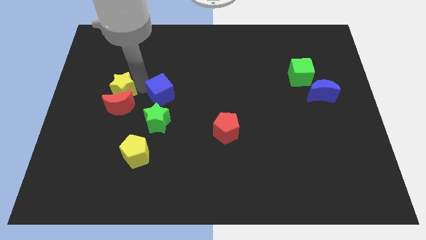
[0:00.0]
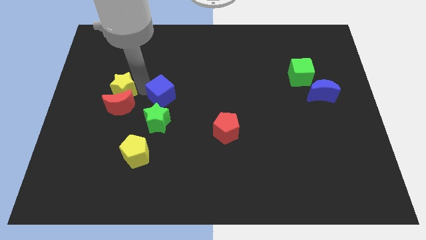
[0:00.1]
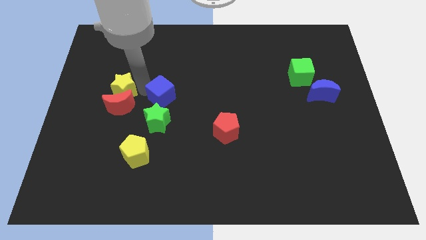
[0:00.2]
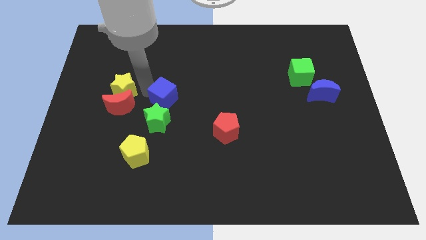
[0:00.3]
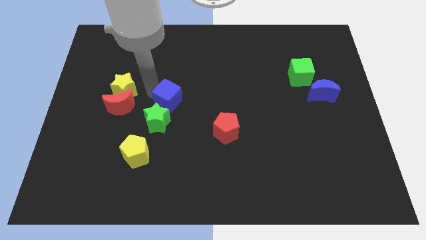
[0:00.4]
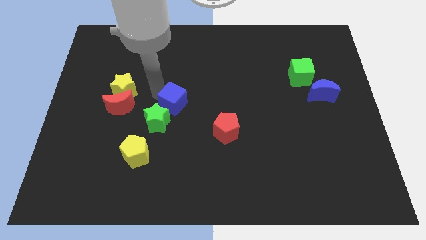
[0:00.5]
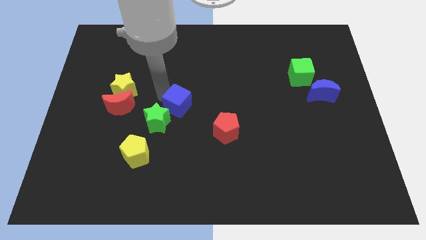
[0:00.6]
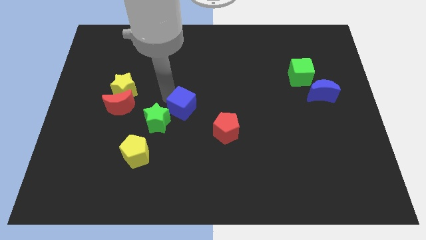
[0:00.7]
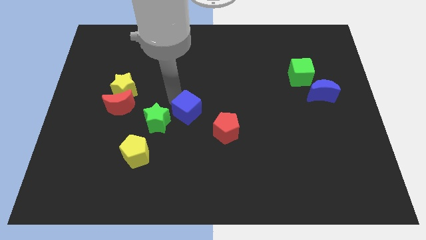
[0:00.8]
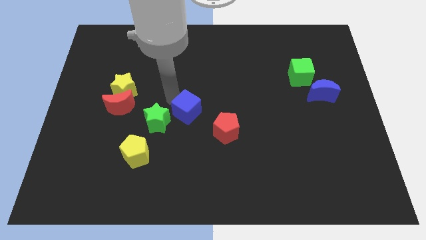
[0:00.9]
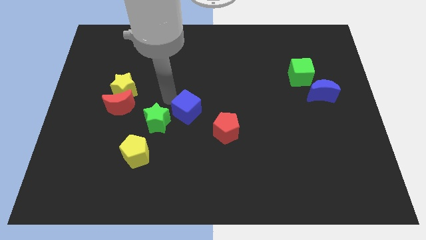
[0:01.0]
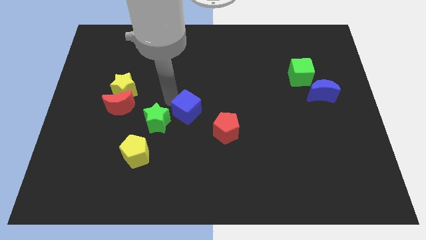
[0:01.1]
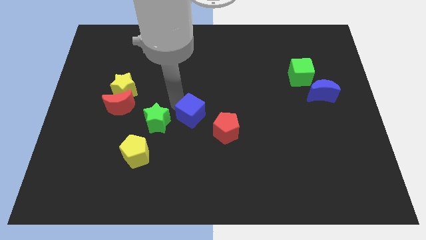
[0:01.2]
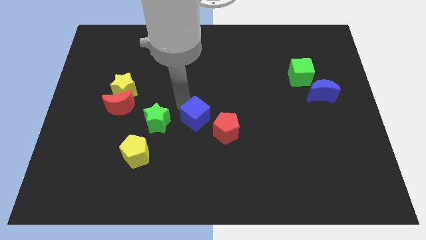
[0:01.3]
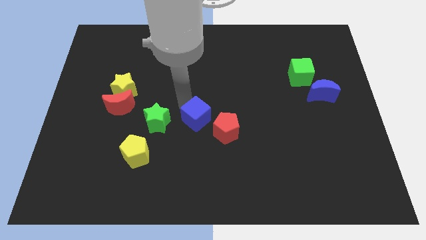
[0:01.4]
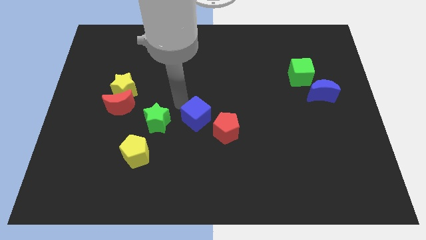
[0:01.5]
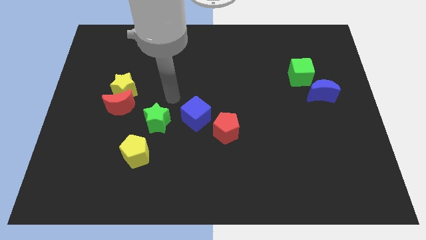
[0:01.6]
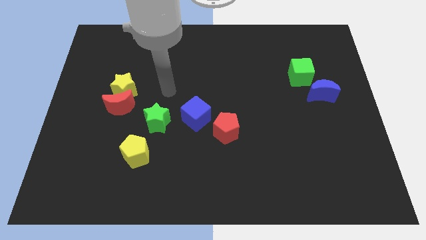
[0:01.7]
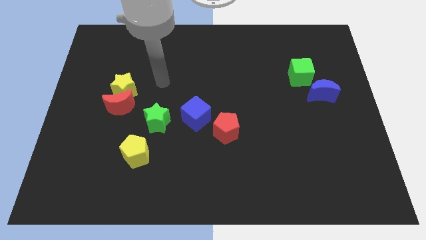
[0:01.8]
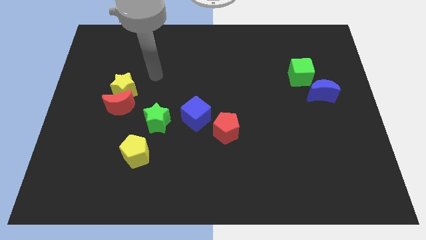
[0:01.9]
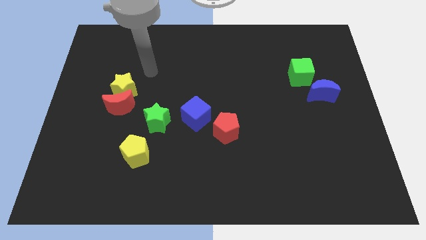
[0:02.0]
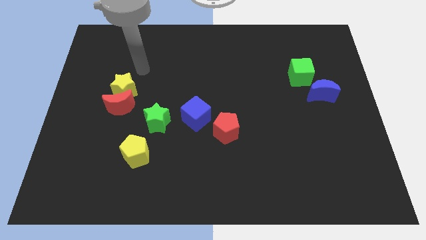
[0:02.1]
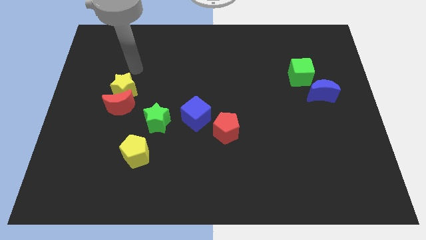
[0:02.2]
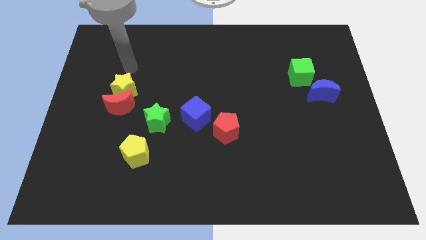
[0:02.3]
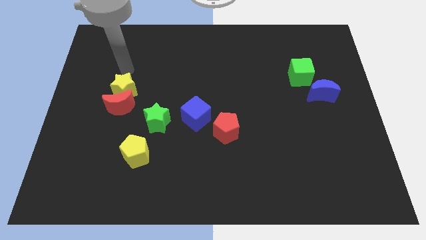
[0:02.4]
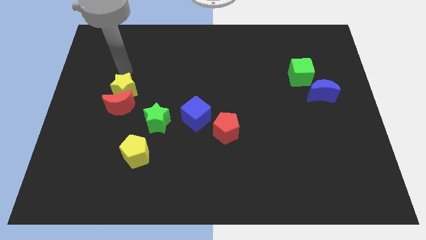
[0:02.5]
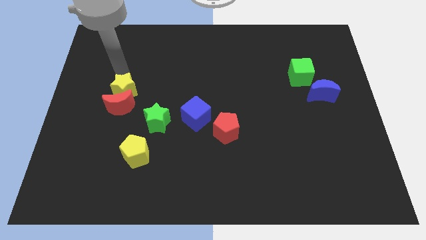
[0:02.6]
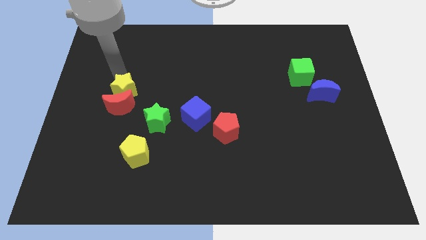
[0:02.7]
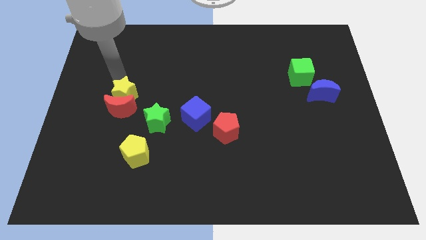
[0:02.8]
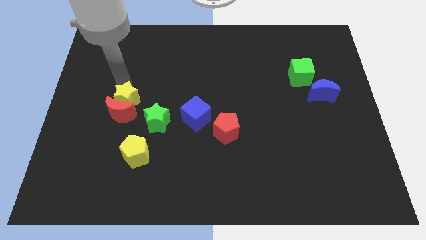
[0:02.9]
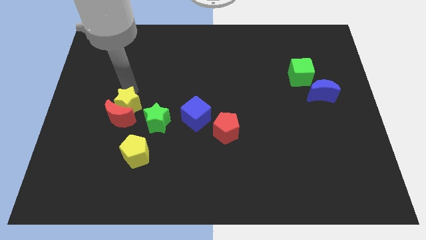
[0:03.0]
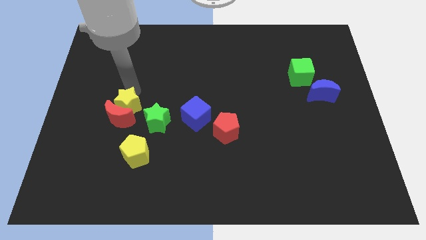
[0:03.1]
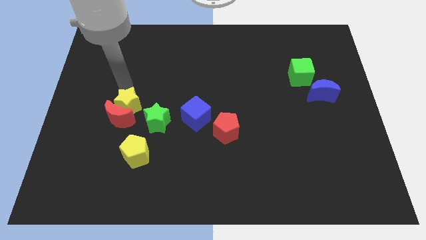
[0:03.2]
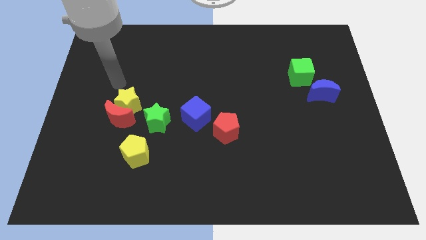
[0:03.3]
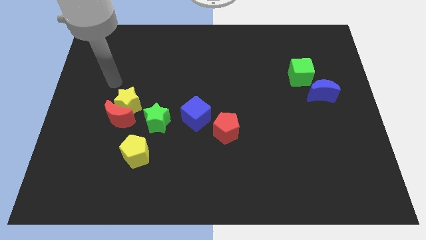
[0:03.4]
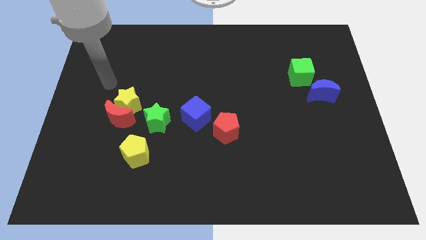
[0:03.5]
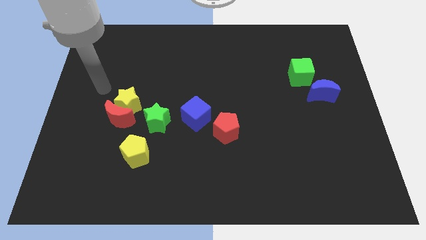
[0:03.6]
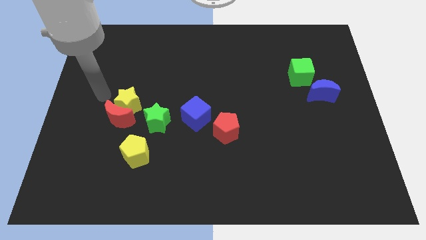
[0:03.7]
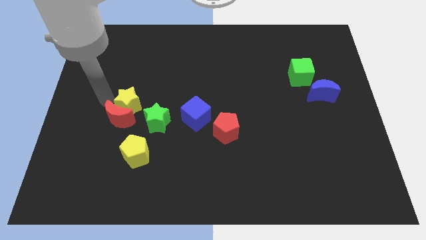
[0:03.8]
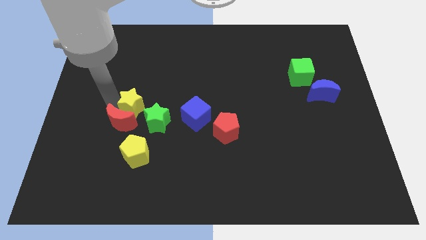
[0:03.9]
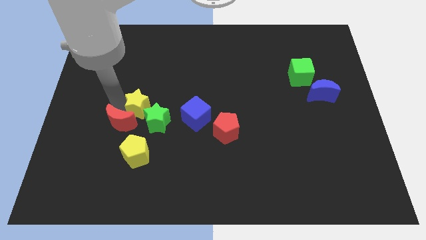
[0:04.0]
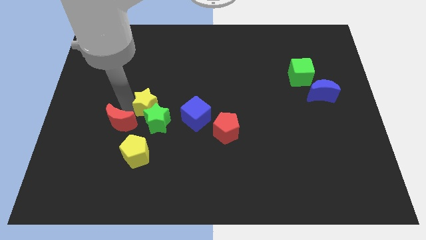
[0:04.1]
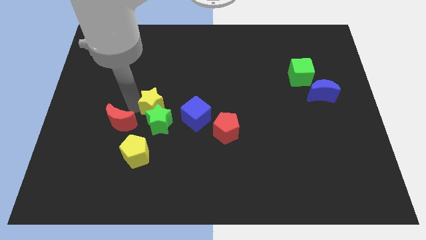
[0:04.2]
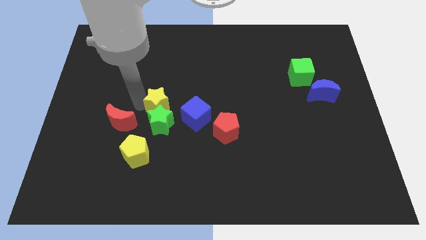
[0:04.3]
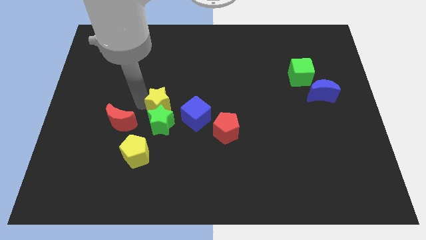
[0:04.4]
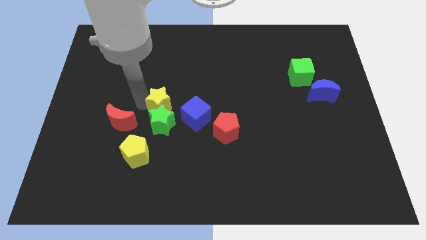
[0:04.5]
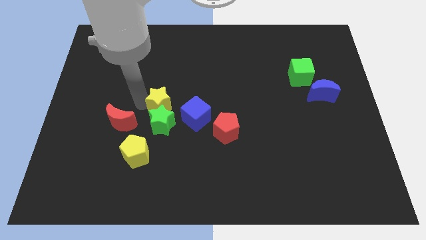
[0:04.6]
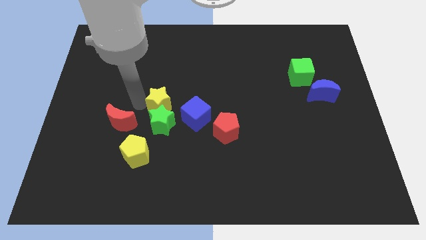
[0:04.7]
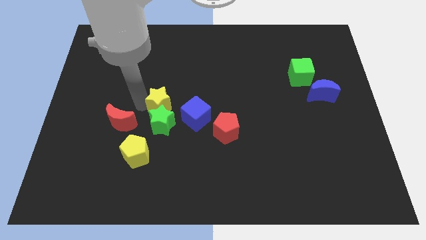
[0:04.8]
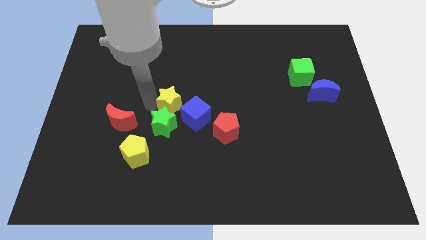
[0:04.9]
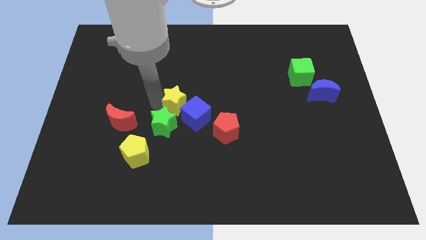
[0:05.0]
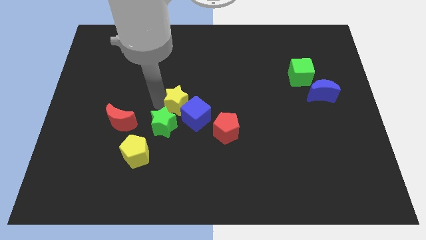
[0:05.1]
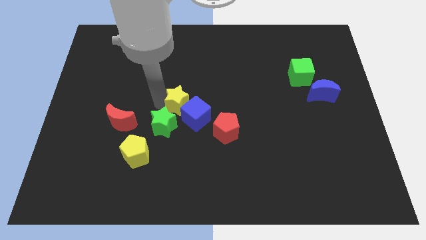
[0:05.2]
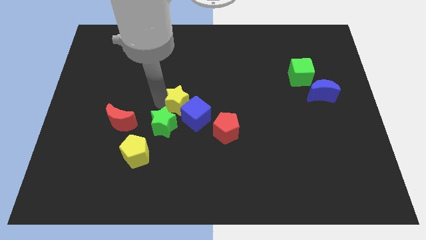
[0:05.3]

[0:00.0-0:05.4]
place the blue cube and the yellow star at the center of the board

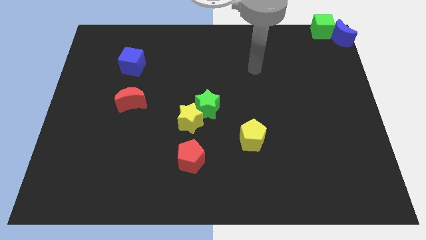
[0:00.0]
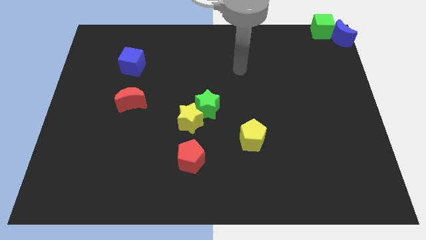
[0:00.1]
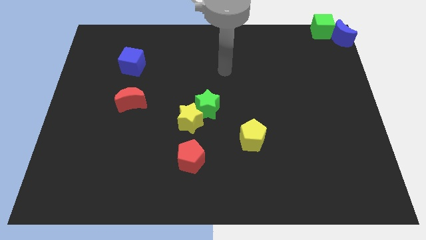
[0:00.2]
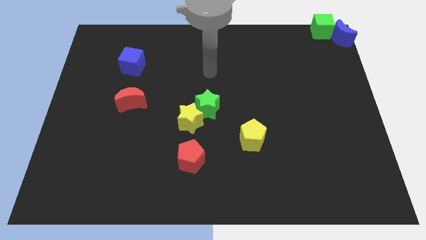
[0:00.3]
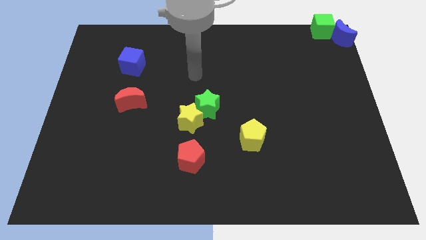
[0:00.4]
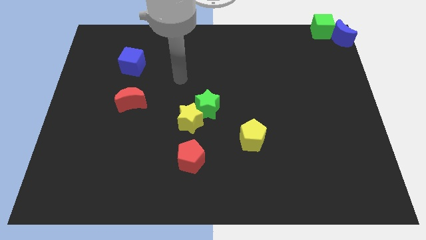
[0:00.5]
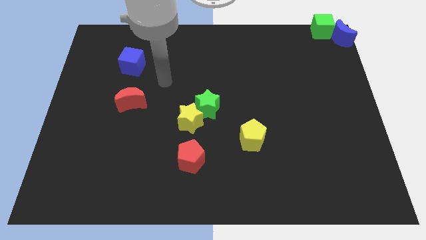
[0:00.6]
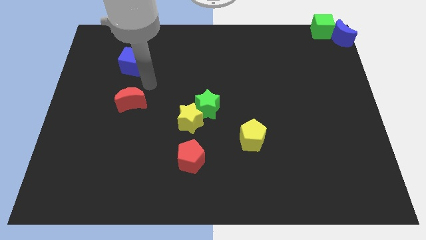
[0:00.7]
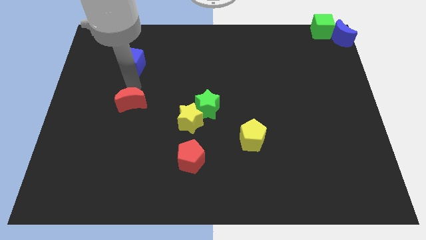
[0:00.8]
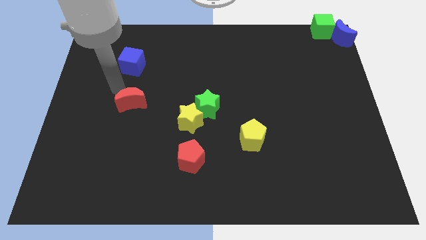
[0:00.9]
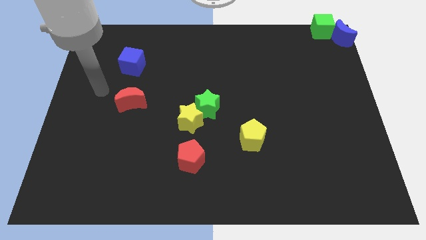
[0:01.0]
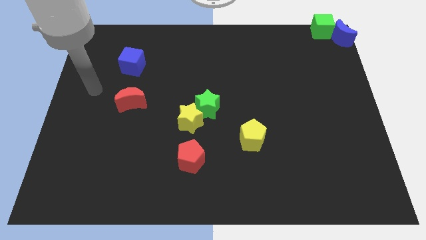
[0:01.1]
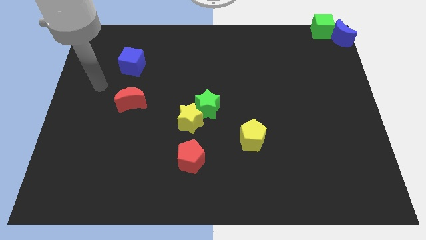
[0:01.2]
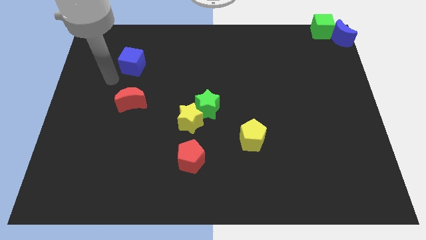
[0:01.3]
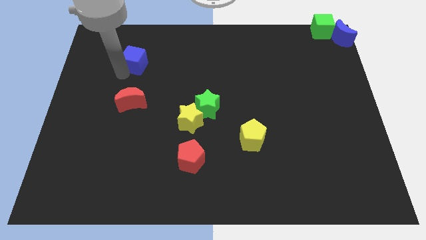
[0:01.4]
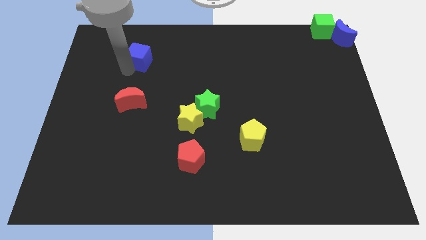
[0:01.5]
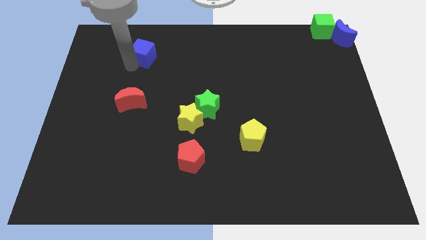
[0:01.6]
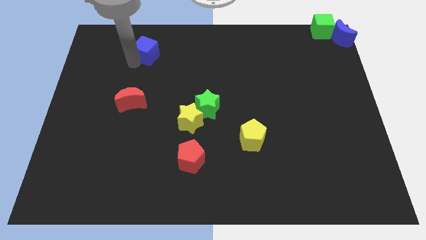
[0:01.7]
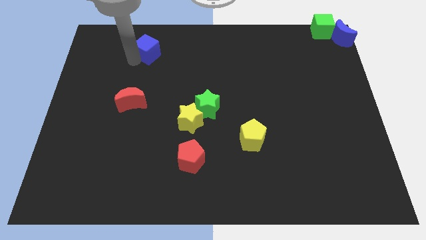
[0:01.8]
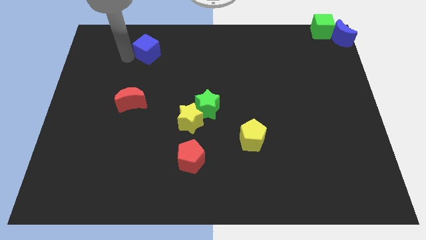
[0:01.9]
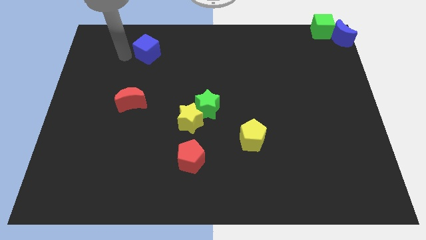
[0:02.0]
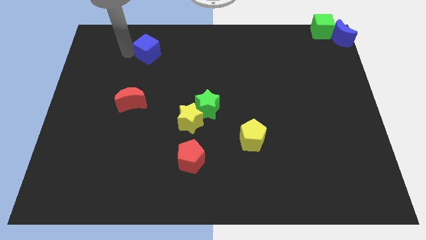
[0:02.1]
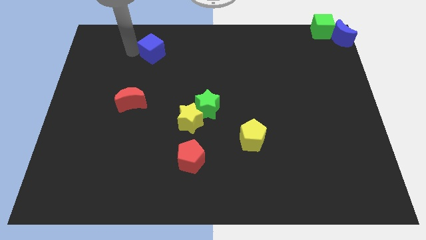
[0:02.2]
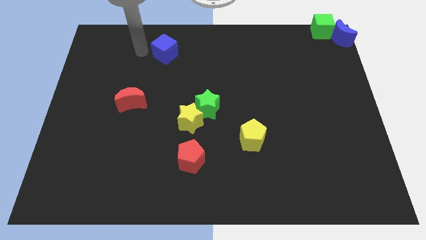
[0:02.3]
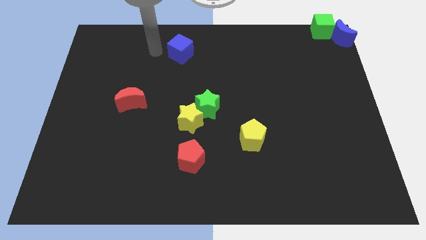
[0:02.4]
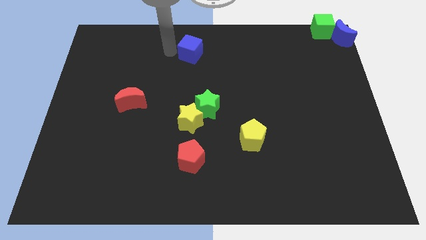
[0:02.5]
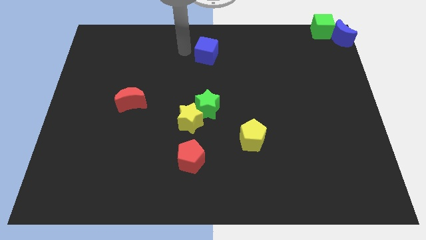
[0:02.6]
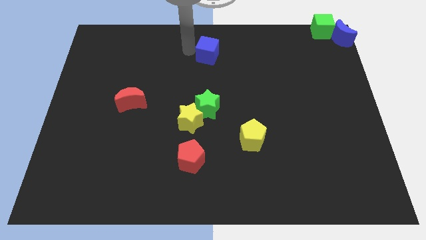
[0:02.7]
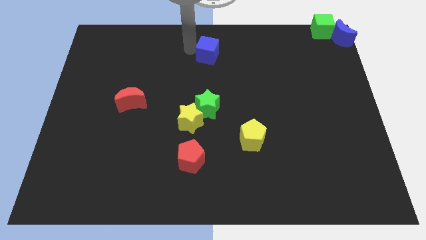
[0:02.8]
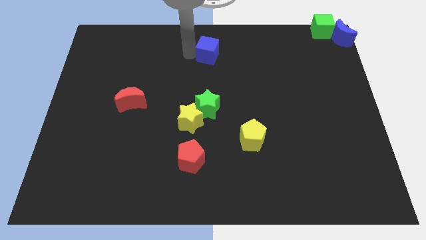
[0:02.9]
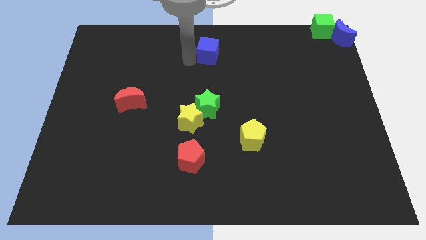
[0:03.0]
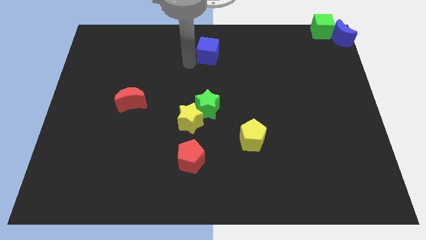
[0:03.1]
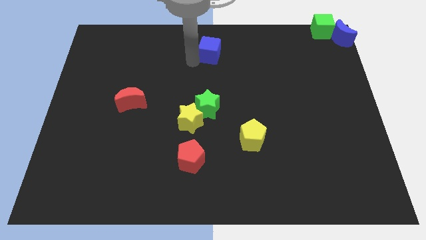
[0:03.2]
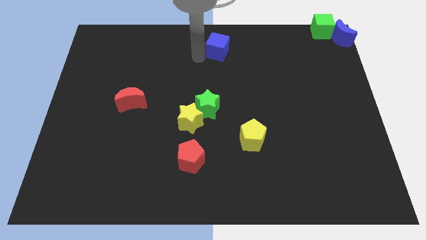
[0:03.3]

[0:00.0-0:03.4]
put the blue cube at the top center of the board

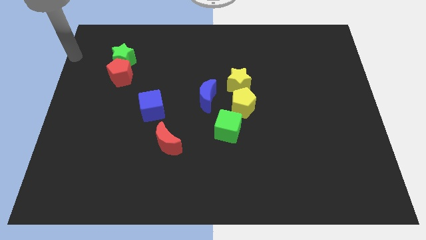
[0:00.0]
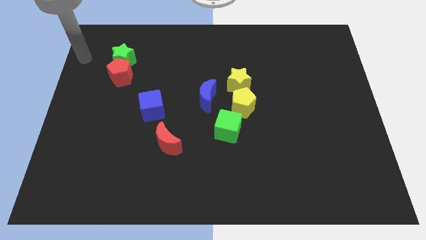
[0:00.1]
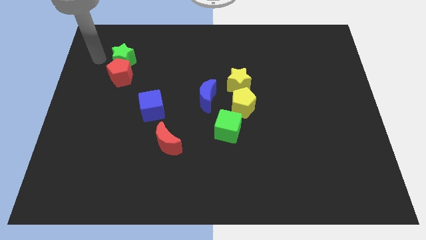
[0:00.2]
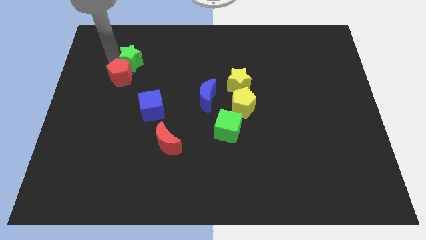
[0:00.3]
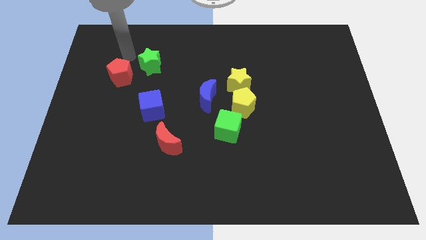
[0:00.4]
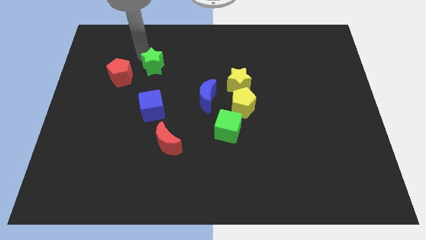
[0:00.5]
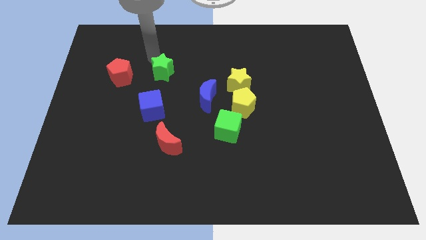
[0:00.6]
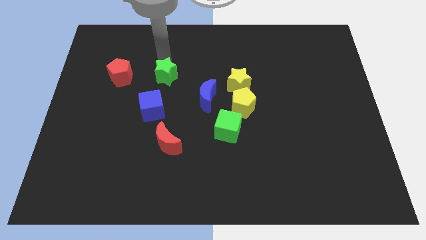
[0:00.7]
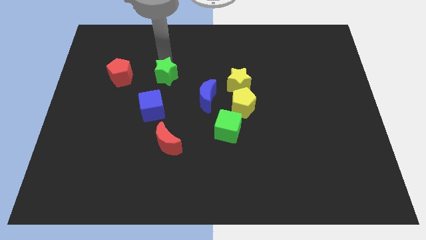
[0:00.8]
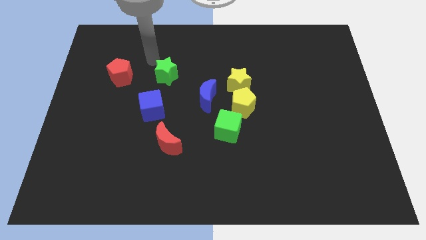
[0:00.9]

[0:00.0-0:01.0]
separate the green star from the red pentagon
